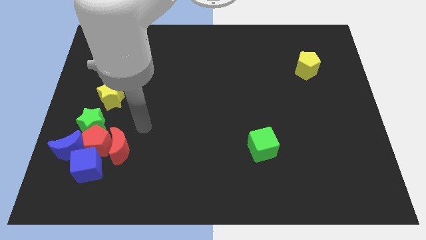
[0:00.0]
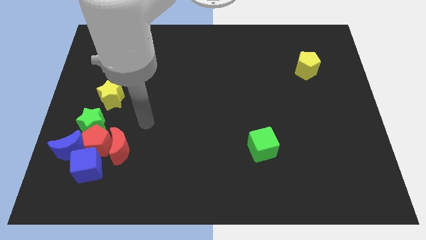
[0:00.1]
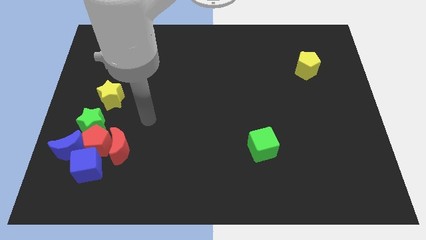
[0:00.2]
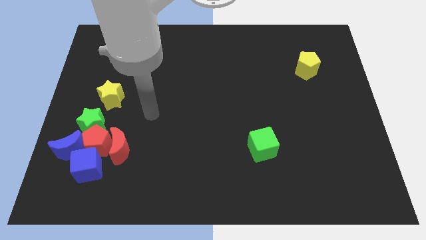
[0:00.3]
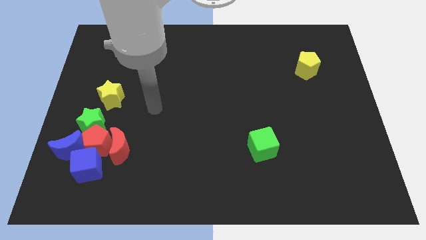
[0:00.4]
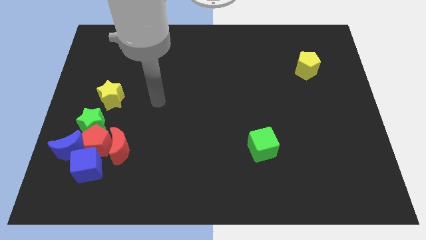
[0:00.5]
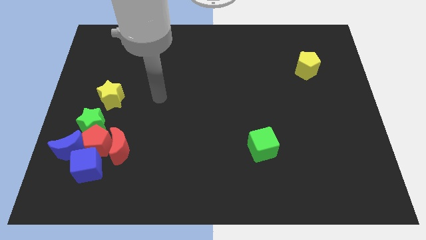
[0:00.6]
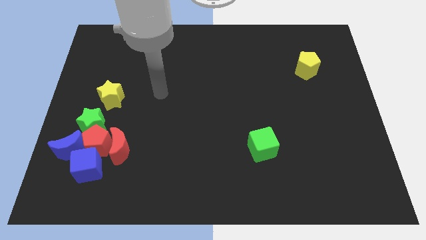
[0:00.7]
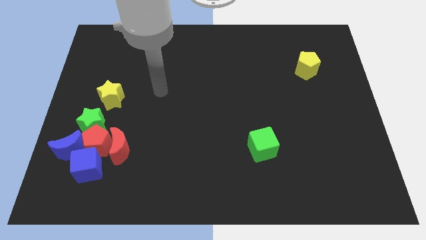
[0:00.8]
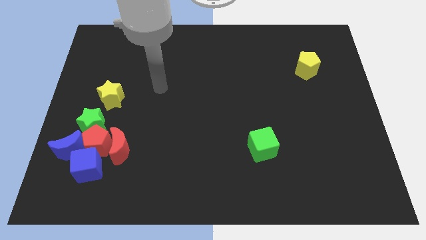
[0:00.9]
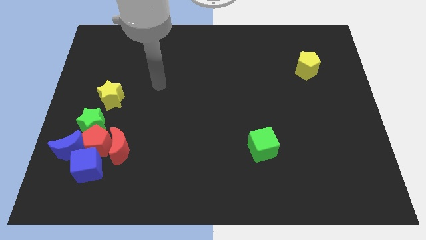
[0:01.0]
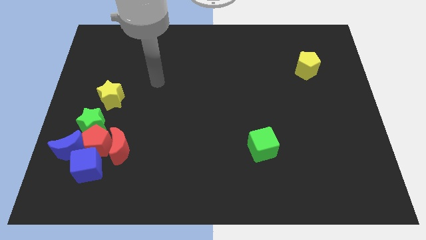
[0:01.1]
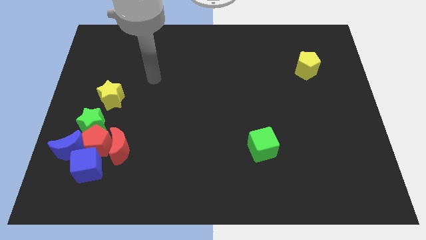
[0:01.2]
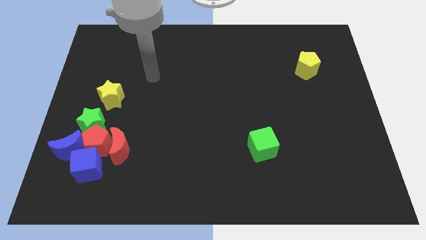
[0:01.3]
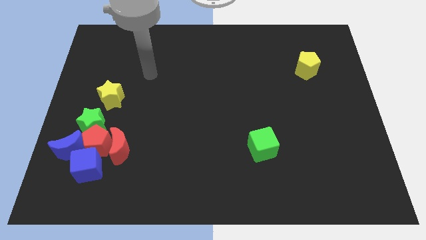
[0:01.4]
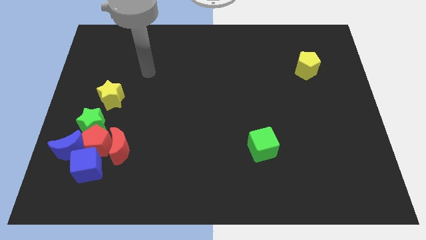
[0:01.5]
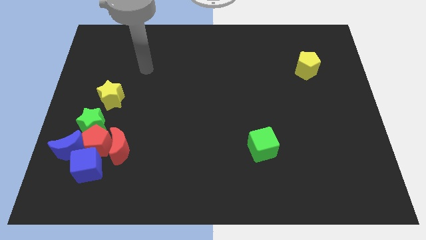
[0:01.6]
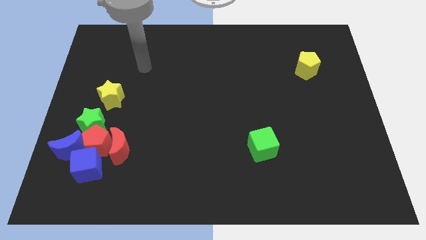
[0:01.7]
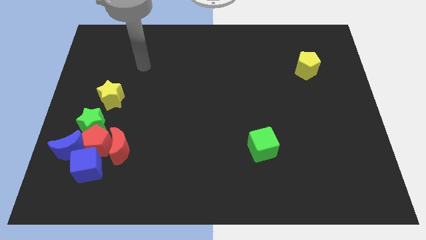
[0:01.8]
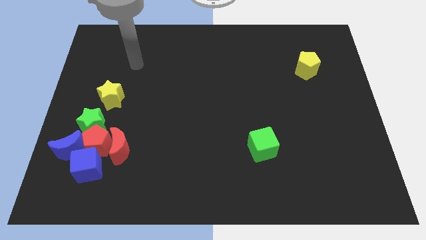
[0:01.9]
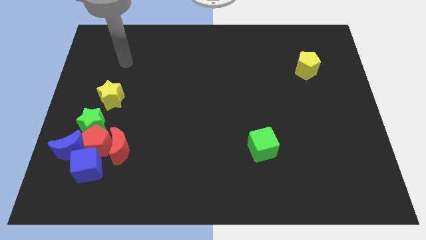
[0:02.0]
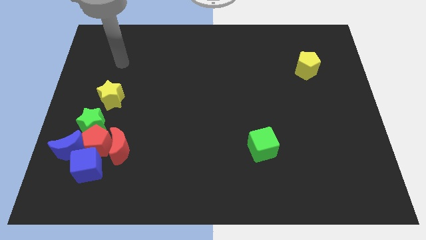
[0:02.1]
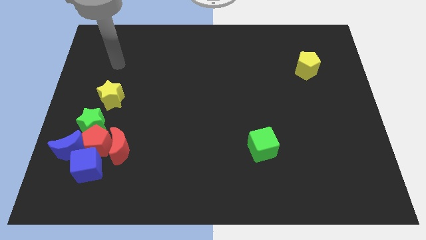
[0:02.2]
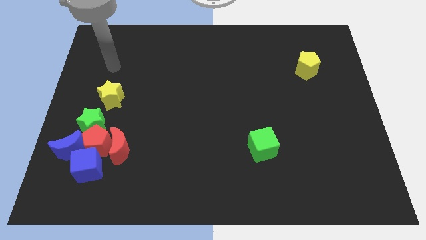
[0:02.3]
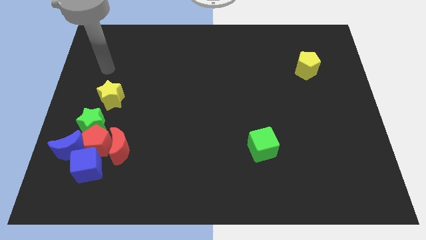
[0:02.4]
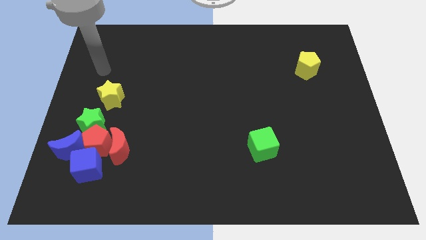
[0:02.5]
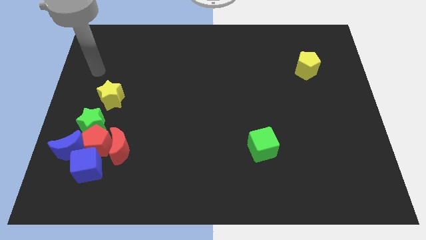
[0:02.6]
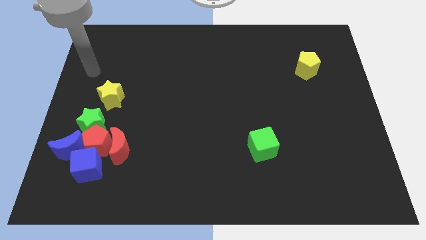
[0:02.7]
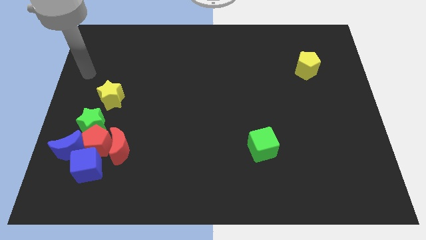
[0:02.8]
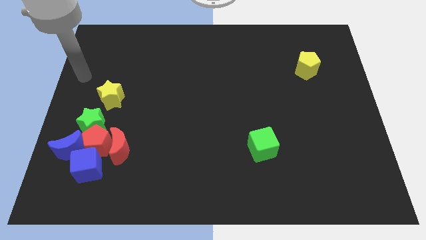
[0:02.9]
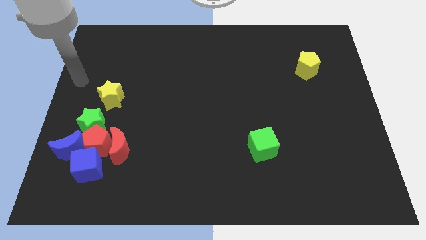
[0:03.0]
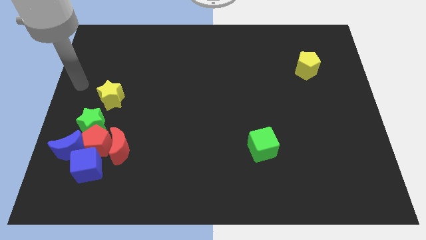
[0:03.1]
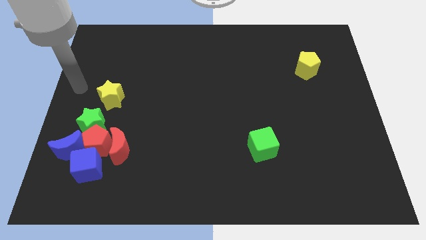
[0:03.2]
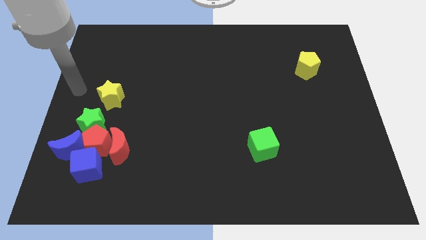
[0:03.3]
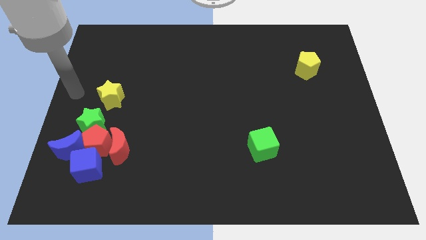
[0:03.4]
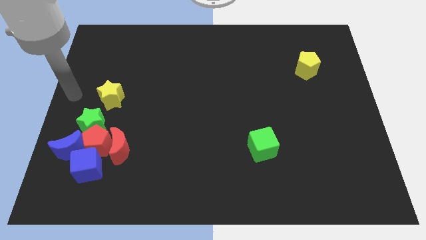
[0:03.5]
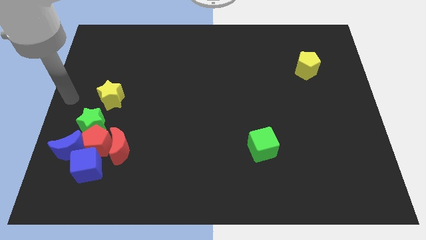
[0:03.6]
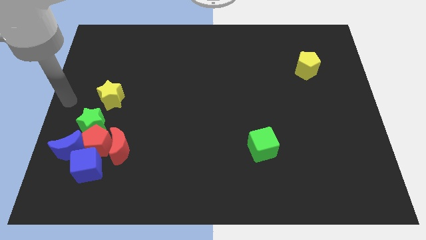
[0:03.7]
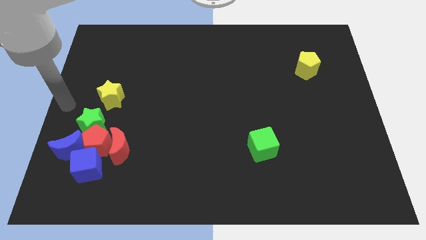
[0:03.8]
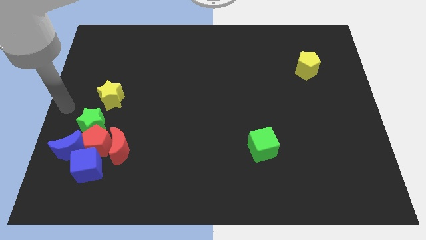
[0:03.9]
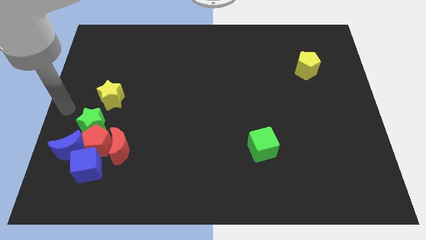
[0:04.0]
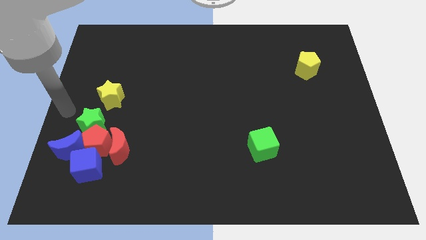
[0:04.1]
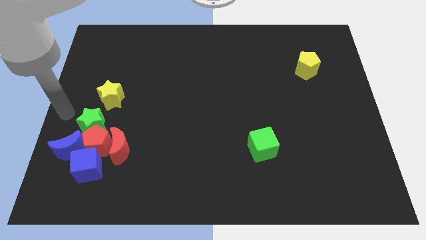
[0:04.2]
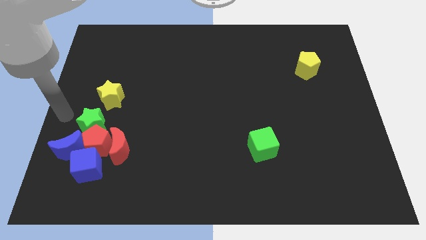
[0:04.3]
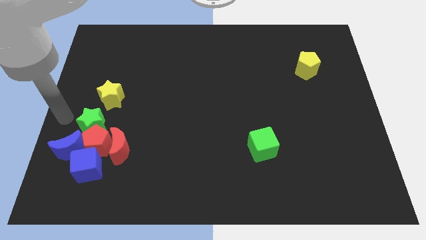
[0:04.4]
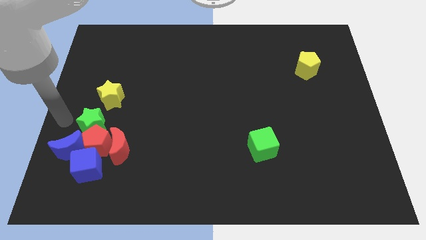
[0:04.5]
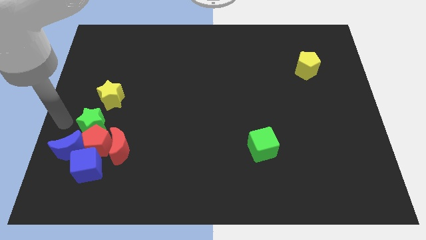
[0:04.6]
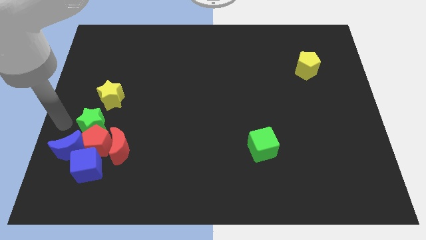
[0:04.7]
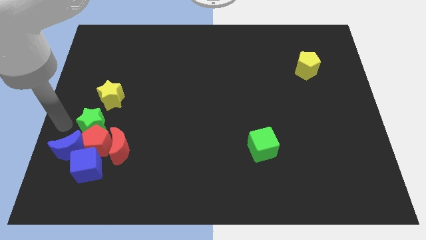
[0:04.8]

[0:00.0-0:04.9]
move your arm to the left of the green star

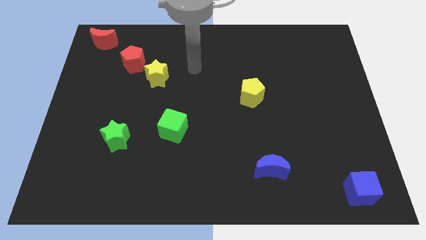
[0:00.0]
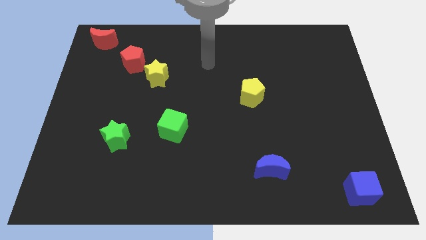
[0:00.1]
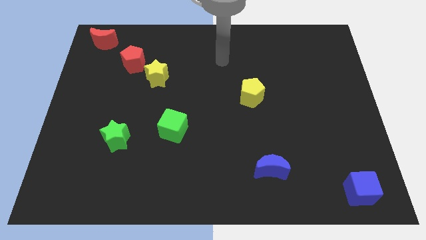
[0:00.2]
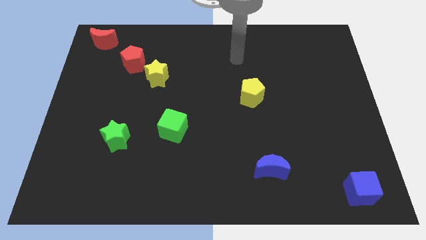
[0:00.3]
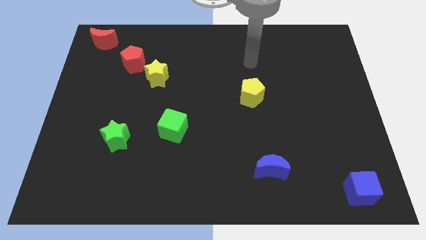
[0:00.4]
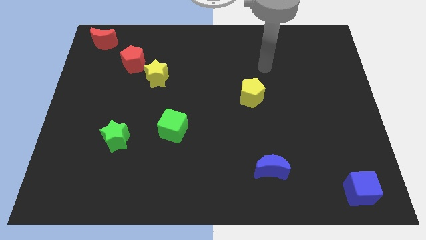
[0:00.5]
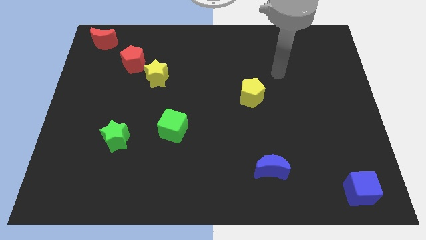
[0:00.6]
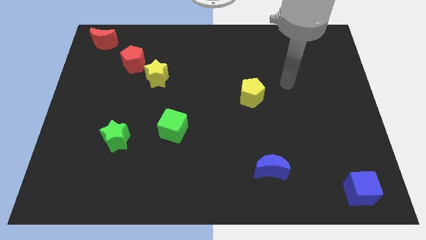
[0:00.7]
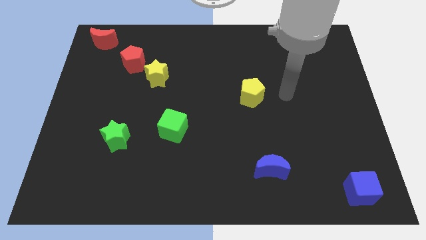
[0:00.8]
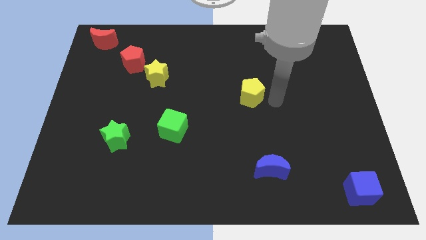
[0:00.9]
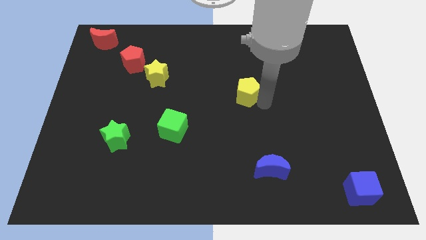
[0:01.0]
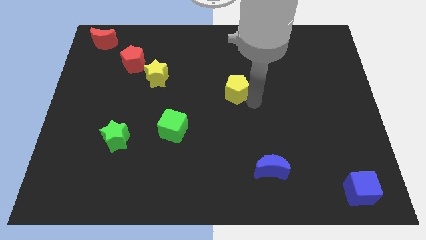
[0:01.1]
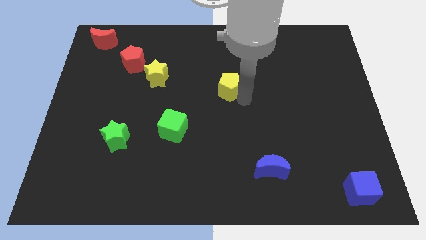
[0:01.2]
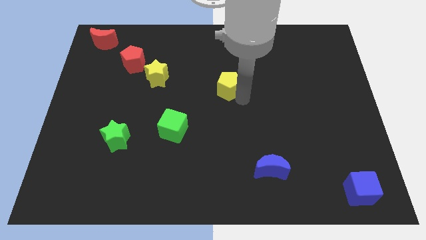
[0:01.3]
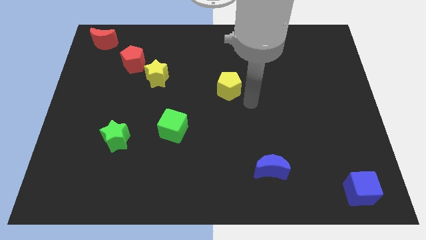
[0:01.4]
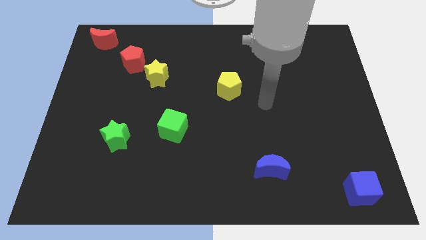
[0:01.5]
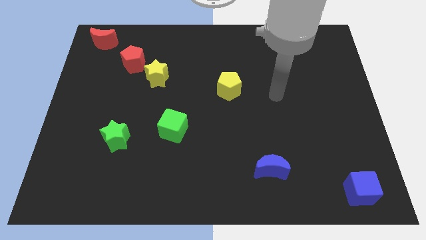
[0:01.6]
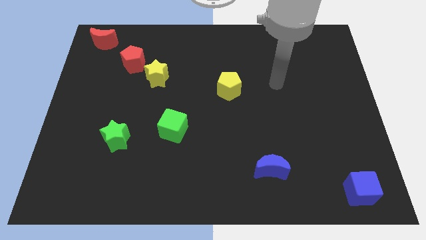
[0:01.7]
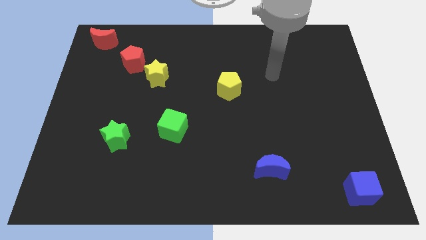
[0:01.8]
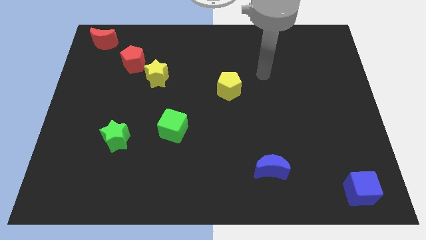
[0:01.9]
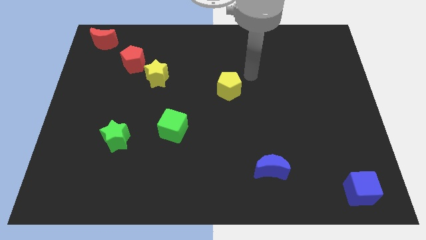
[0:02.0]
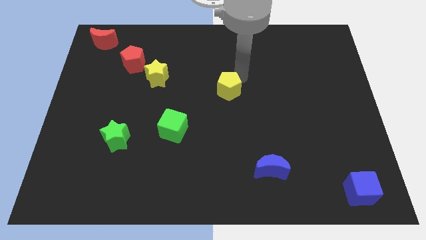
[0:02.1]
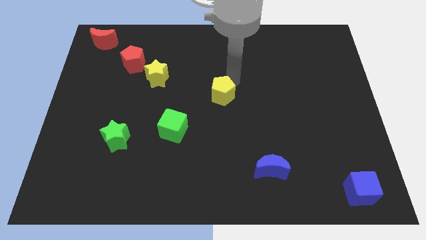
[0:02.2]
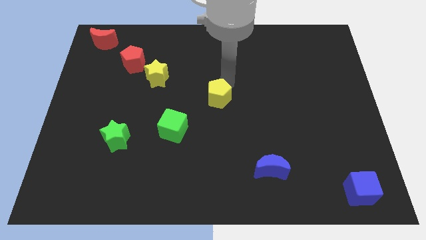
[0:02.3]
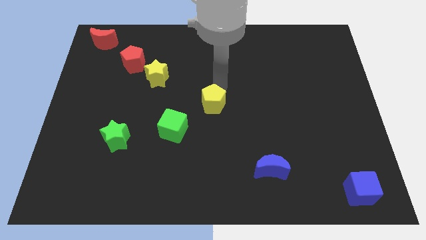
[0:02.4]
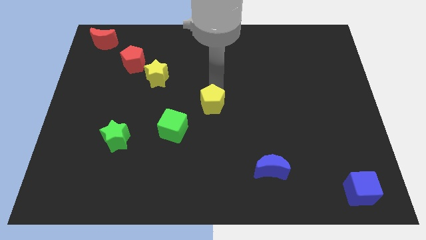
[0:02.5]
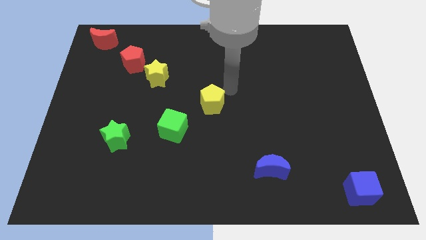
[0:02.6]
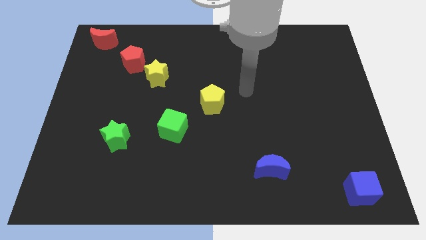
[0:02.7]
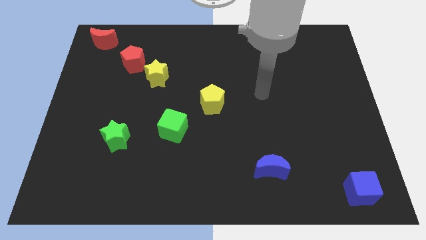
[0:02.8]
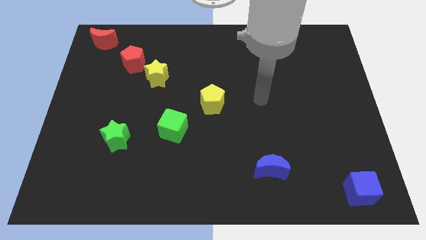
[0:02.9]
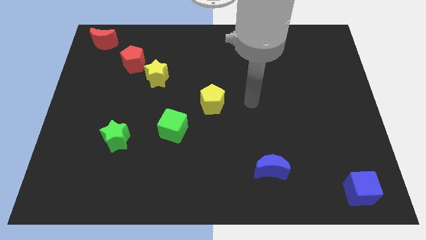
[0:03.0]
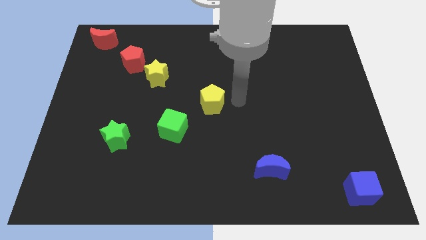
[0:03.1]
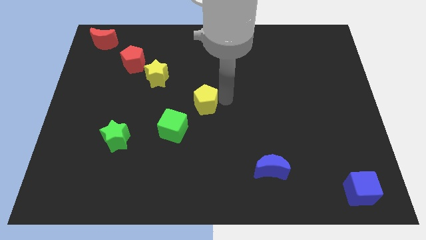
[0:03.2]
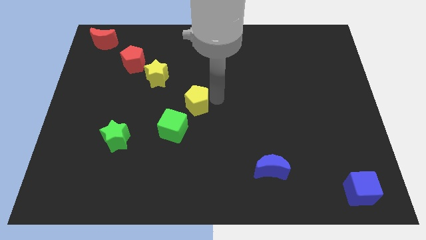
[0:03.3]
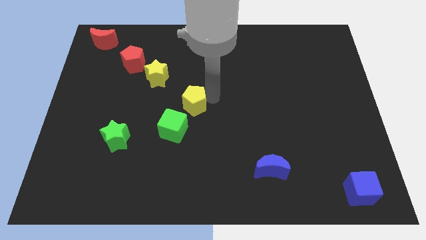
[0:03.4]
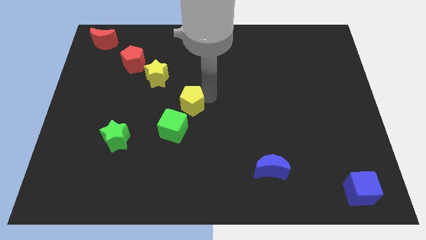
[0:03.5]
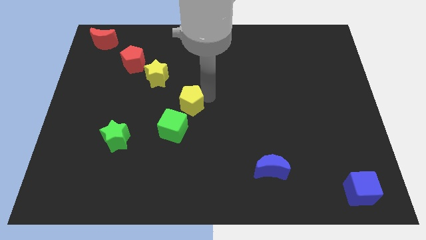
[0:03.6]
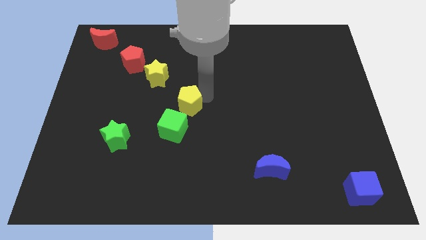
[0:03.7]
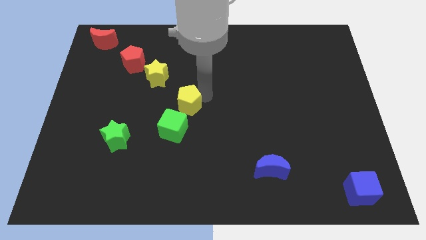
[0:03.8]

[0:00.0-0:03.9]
move the yellow pentagon to the top of the green cube

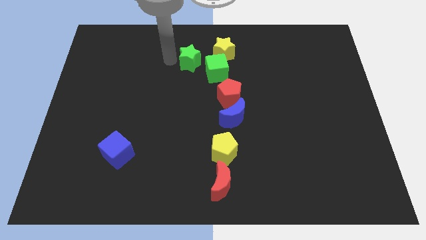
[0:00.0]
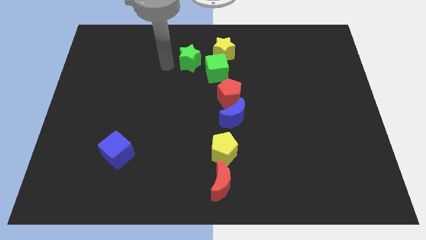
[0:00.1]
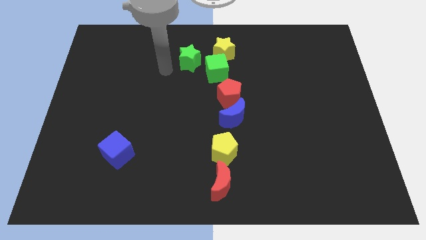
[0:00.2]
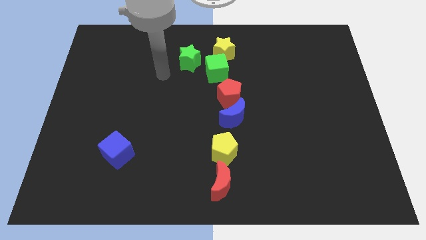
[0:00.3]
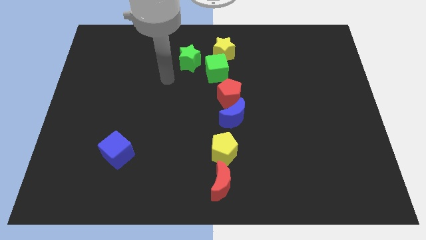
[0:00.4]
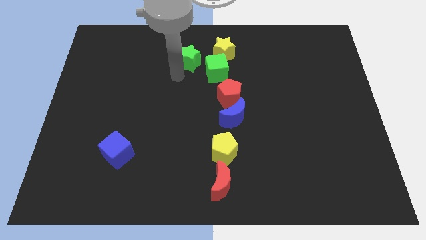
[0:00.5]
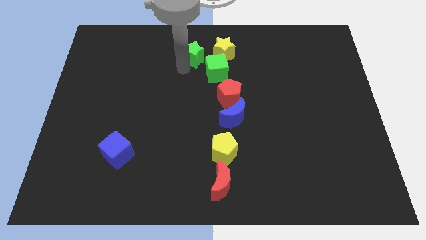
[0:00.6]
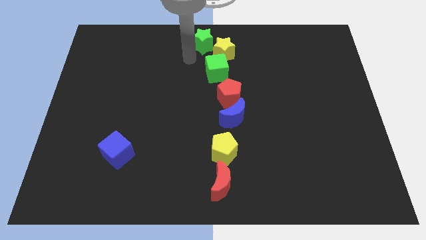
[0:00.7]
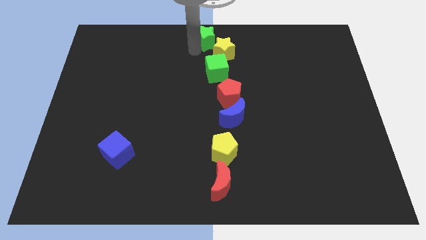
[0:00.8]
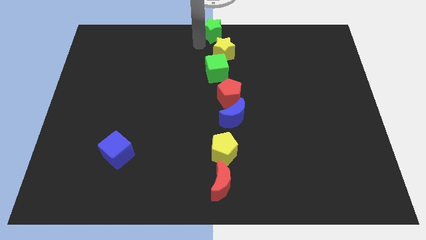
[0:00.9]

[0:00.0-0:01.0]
place the green star above the yellow star
